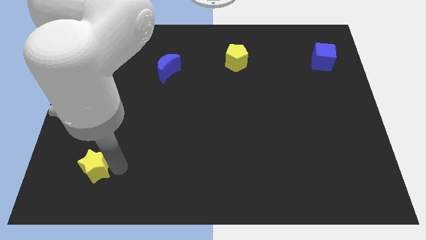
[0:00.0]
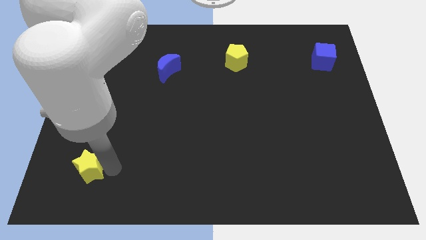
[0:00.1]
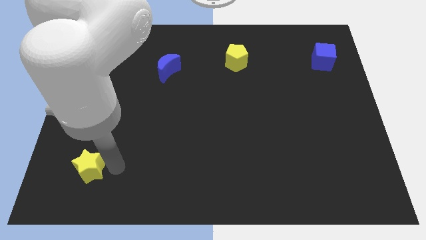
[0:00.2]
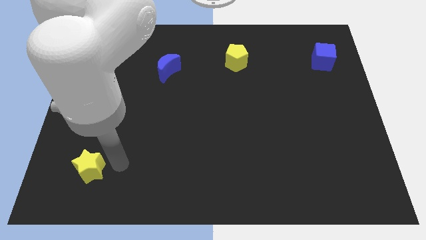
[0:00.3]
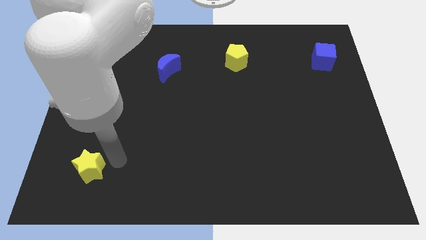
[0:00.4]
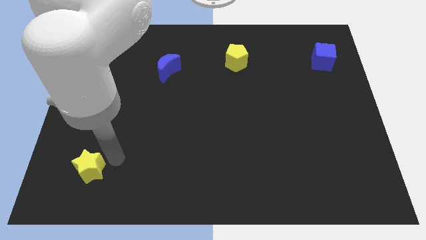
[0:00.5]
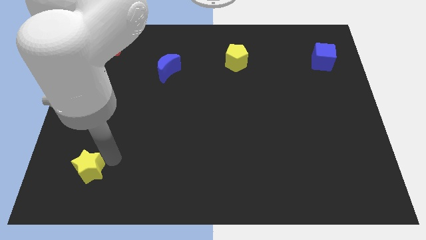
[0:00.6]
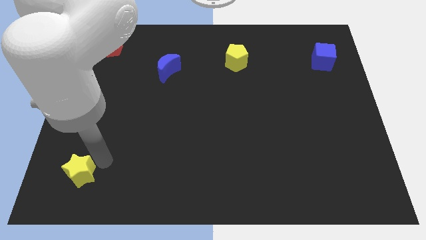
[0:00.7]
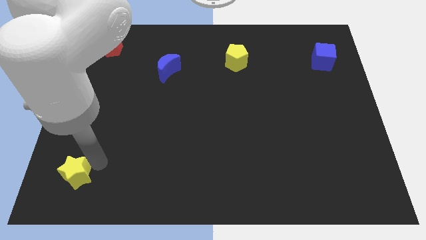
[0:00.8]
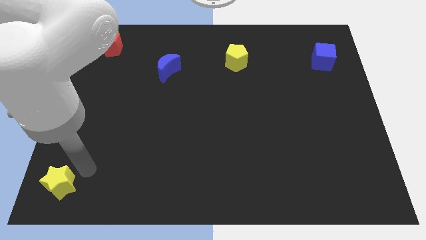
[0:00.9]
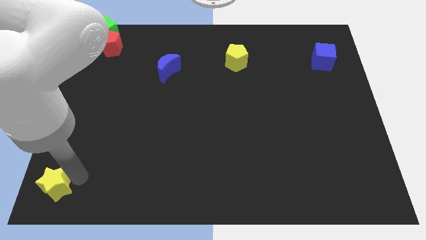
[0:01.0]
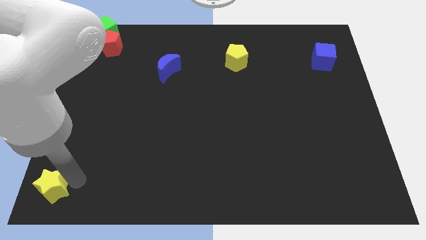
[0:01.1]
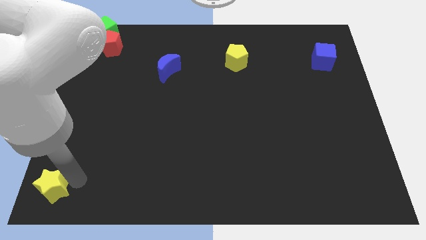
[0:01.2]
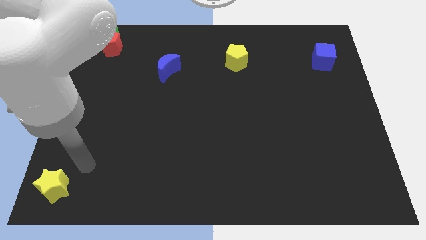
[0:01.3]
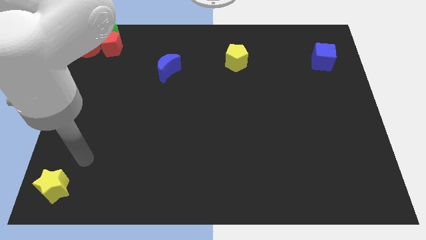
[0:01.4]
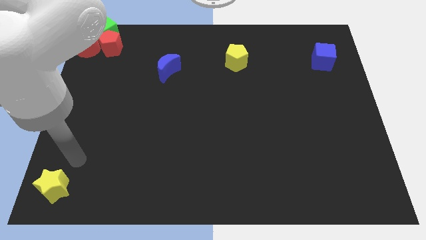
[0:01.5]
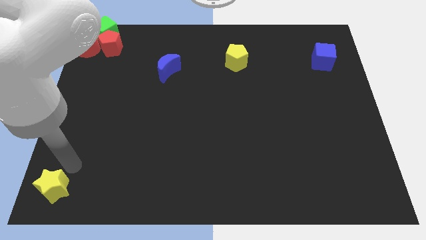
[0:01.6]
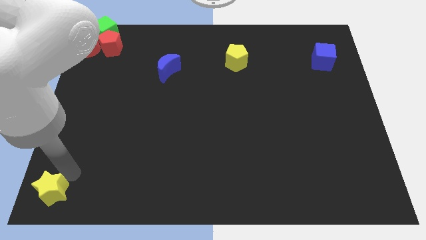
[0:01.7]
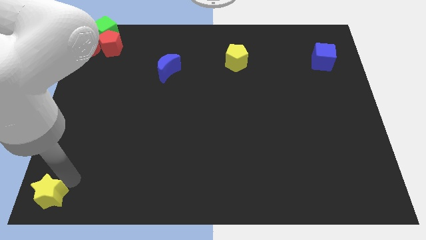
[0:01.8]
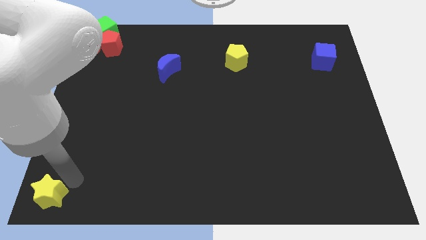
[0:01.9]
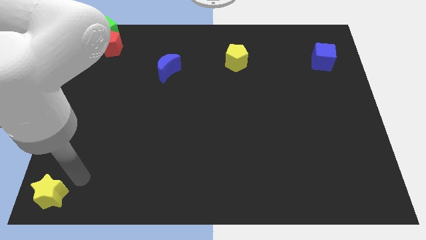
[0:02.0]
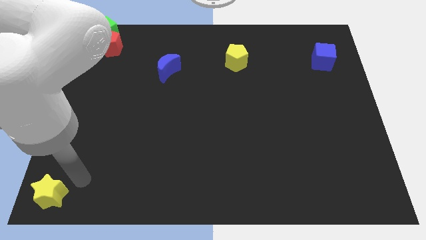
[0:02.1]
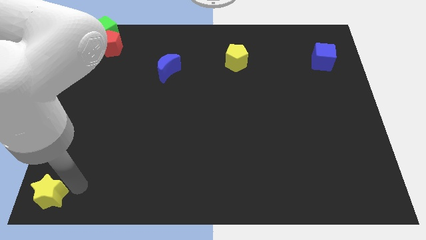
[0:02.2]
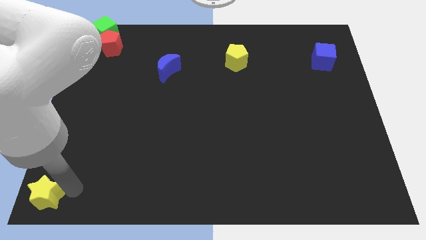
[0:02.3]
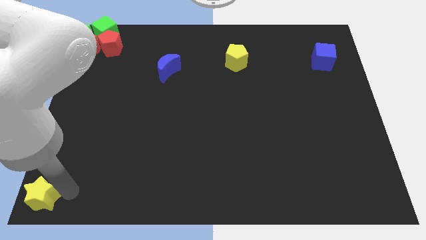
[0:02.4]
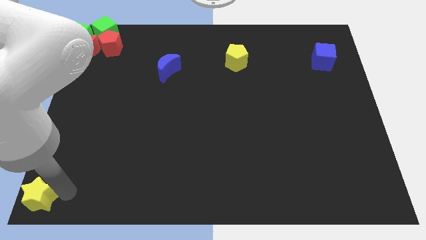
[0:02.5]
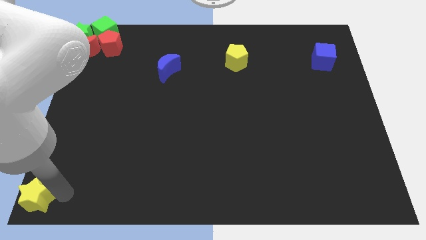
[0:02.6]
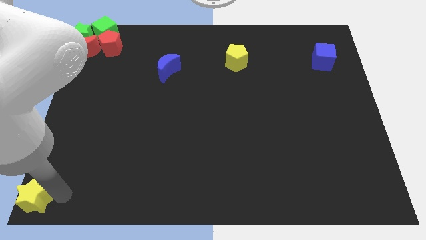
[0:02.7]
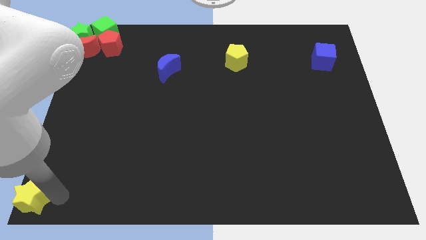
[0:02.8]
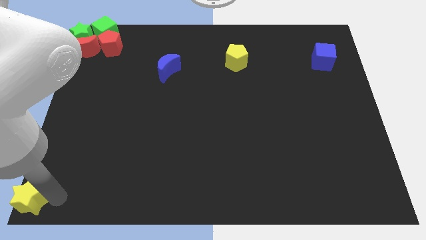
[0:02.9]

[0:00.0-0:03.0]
move the yellow star to the bottom left of the board

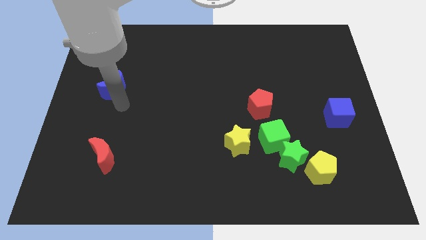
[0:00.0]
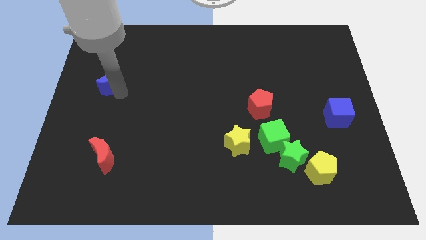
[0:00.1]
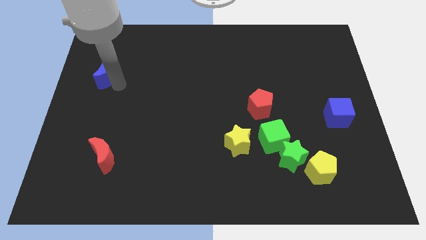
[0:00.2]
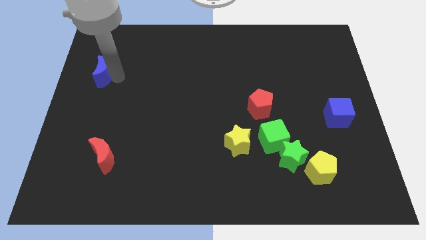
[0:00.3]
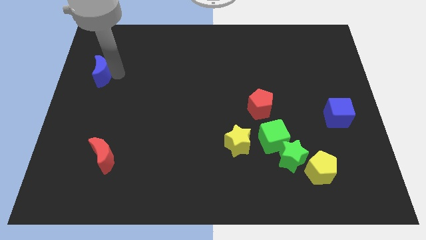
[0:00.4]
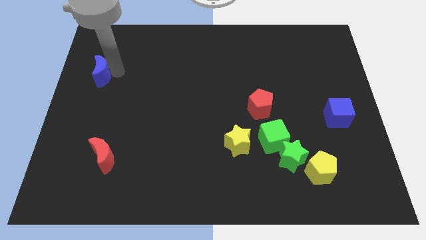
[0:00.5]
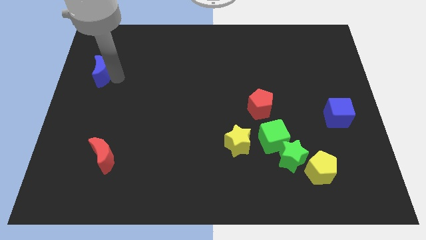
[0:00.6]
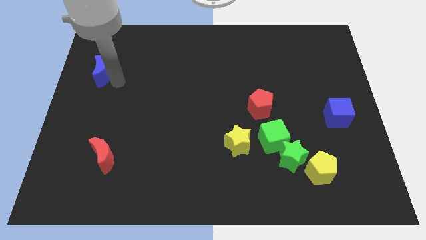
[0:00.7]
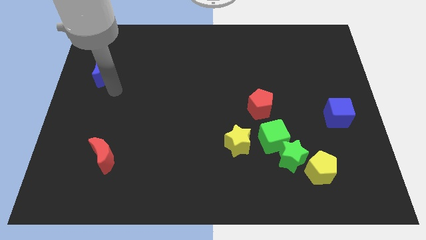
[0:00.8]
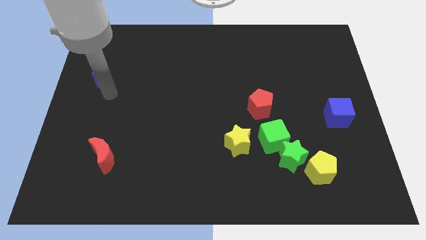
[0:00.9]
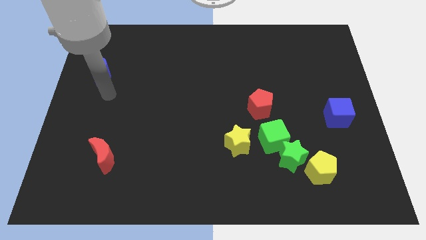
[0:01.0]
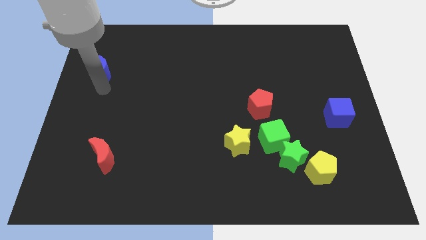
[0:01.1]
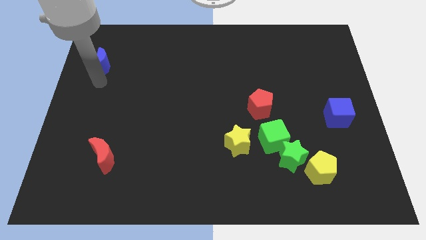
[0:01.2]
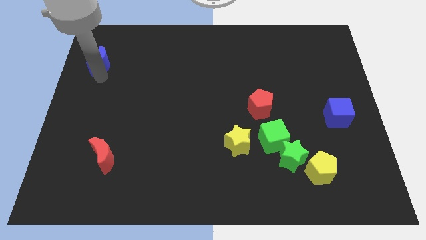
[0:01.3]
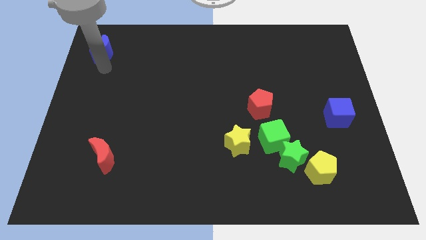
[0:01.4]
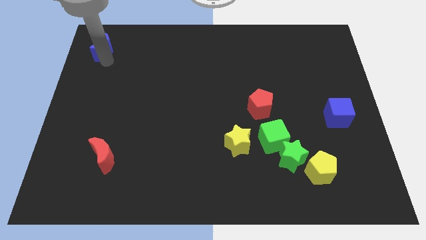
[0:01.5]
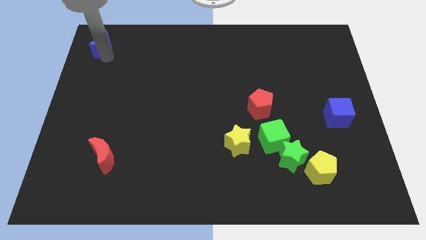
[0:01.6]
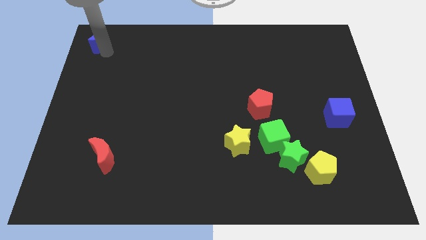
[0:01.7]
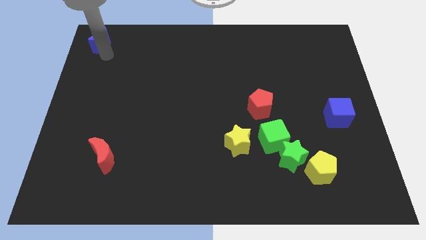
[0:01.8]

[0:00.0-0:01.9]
push the blue moon towards the top left of the board

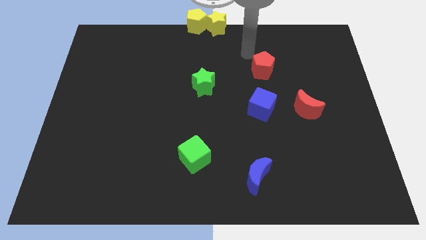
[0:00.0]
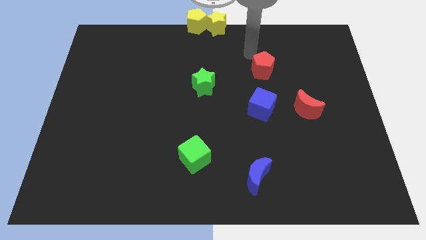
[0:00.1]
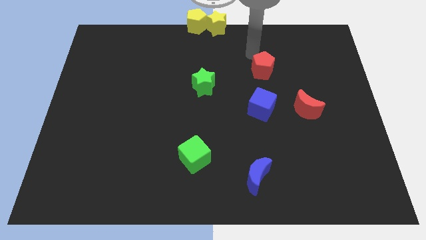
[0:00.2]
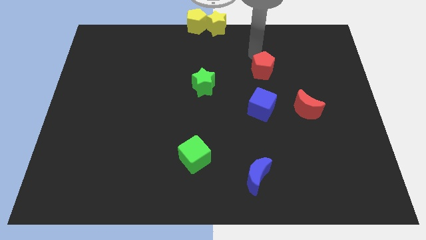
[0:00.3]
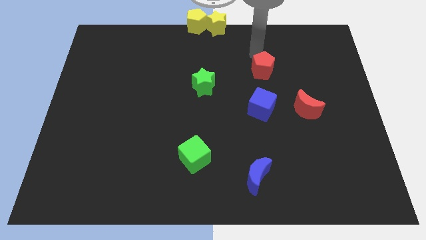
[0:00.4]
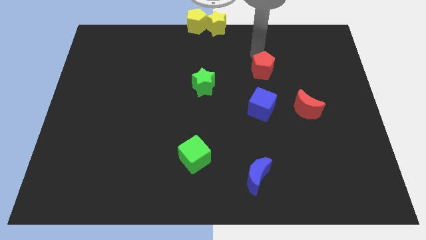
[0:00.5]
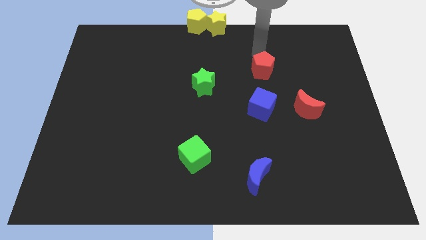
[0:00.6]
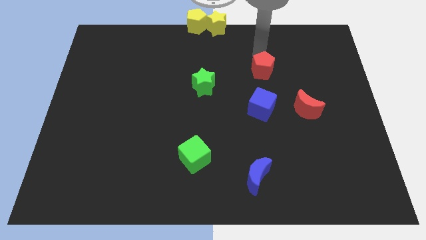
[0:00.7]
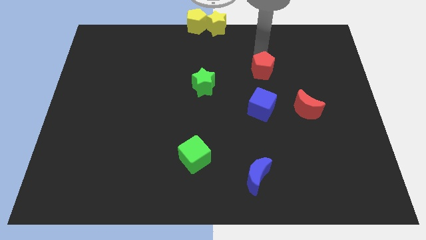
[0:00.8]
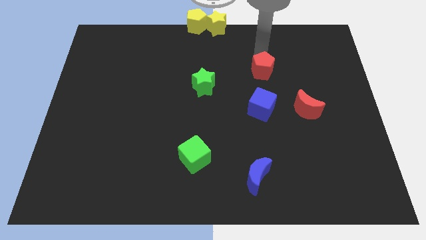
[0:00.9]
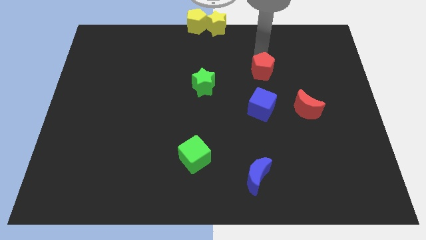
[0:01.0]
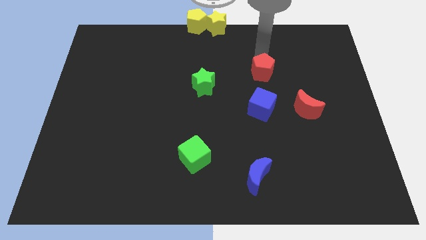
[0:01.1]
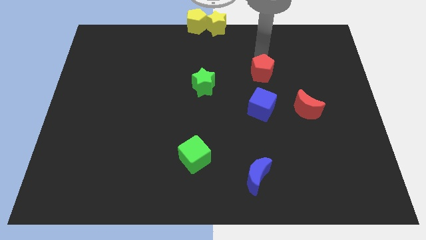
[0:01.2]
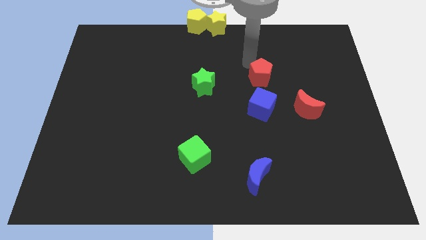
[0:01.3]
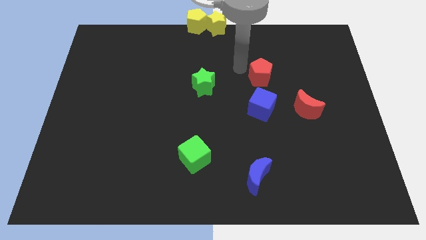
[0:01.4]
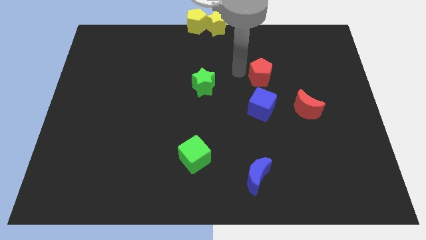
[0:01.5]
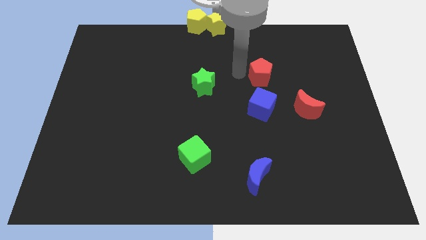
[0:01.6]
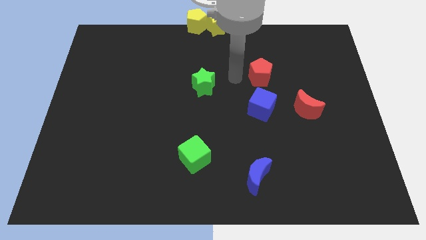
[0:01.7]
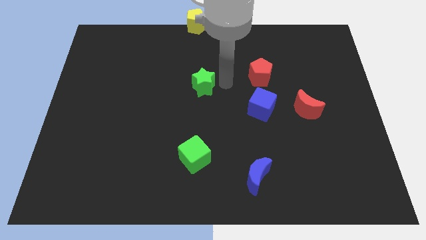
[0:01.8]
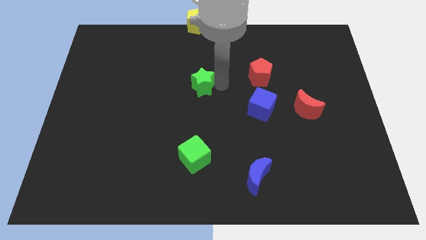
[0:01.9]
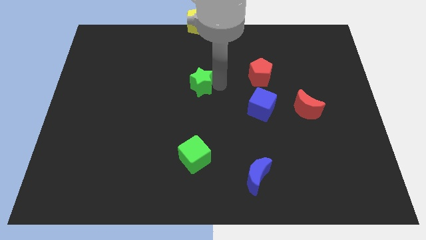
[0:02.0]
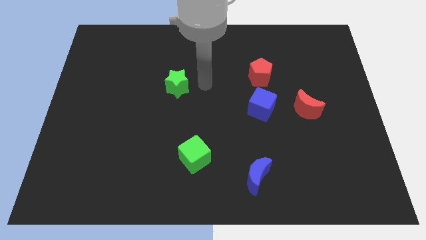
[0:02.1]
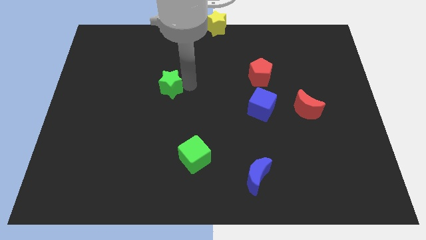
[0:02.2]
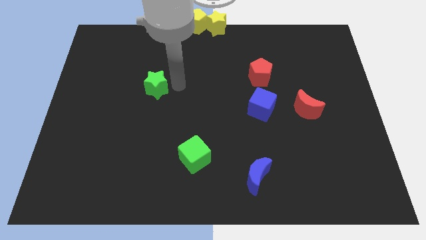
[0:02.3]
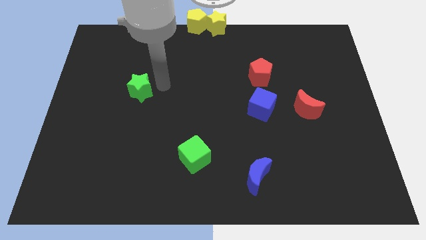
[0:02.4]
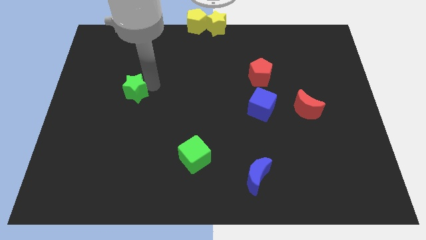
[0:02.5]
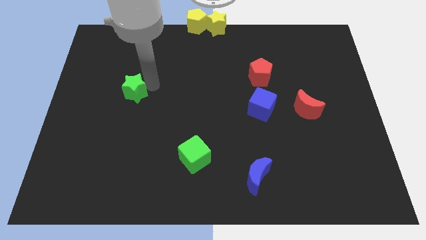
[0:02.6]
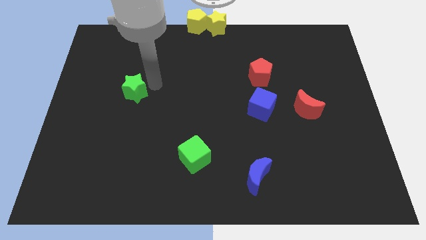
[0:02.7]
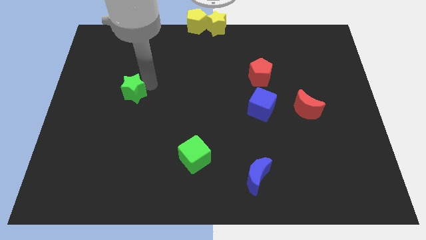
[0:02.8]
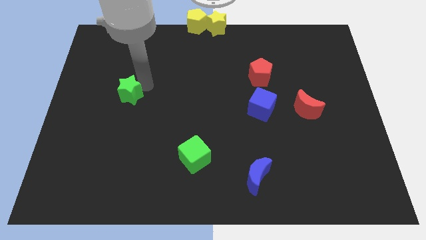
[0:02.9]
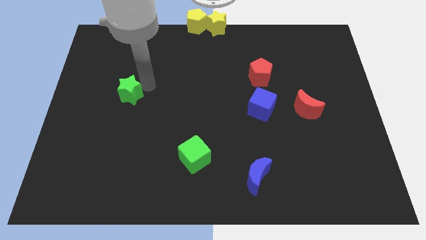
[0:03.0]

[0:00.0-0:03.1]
push the green star to the left center

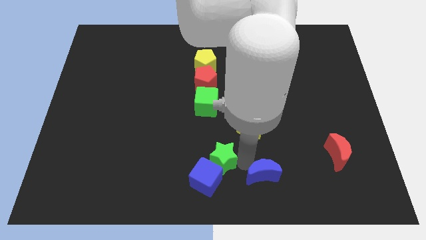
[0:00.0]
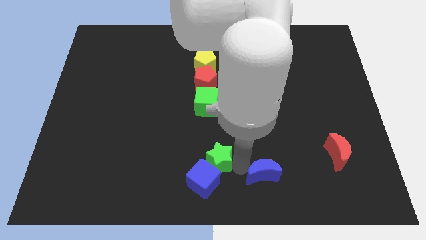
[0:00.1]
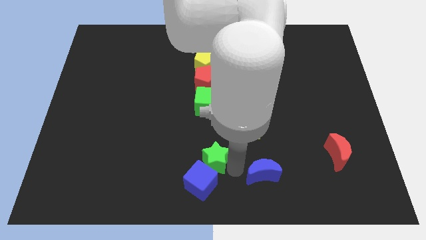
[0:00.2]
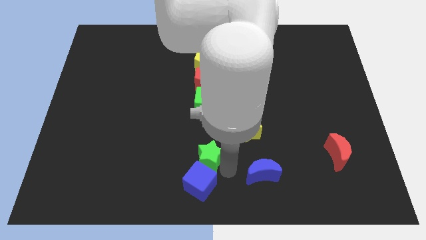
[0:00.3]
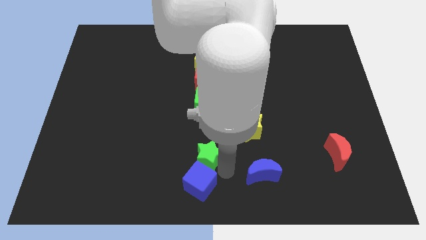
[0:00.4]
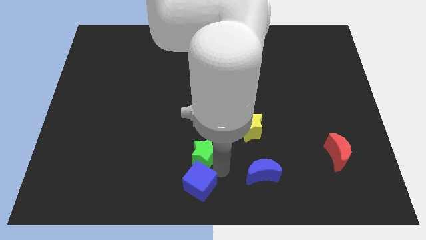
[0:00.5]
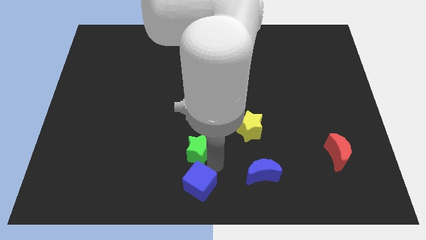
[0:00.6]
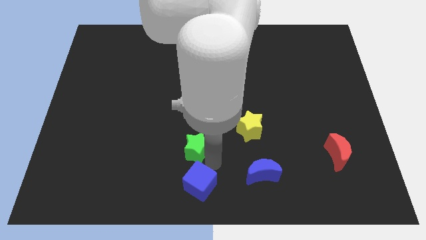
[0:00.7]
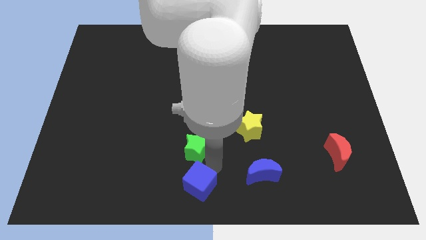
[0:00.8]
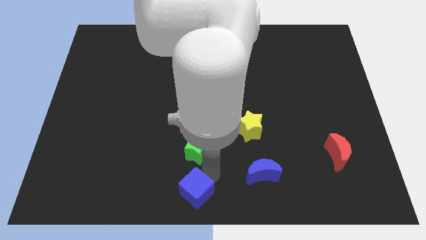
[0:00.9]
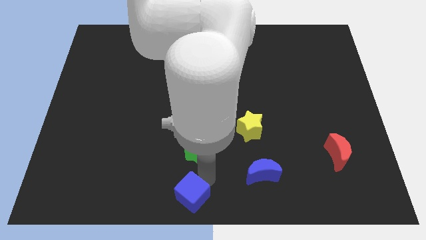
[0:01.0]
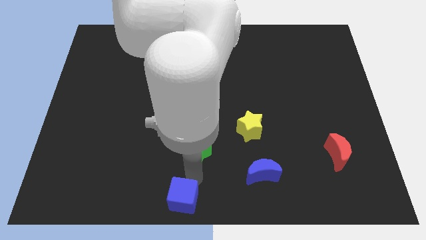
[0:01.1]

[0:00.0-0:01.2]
separate green star and blue moon

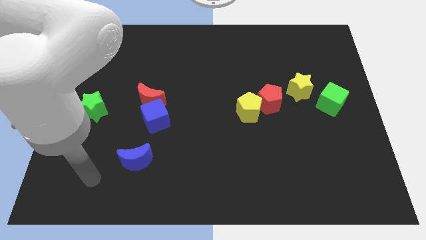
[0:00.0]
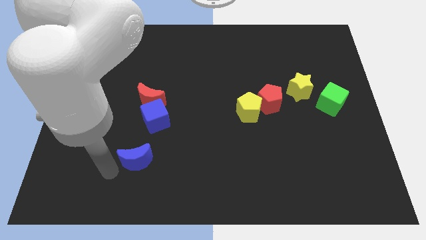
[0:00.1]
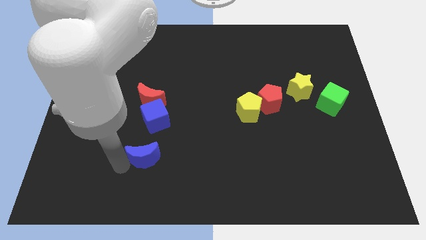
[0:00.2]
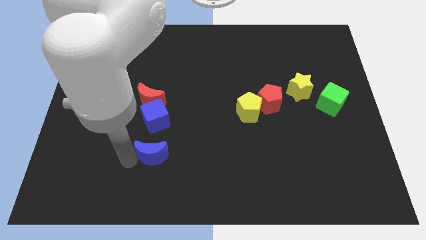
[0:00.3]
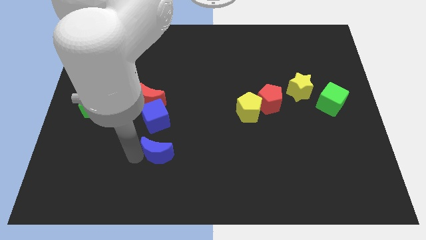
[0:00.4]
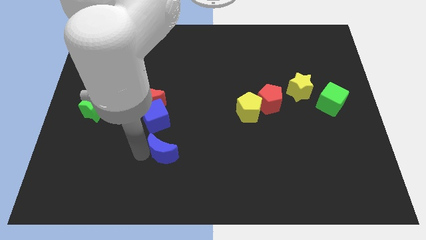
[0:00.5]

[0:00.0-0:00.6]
move the blue crescent below the blue cube
